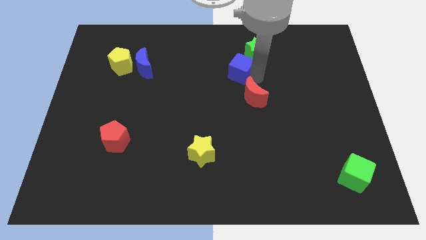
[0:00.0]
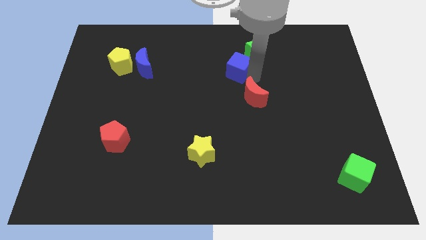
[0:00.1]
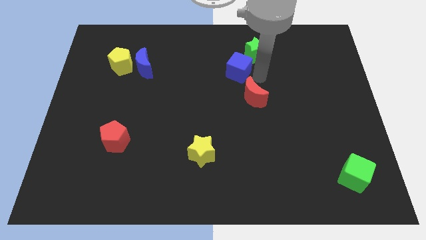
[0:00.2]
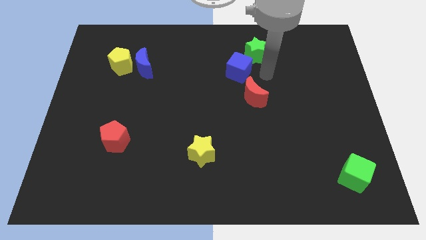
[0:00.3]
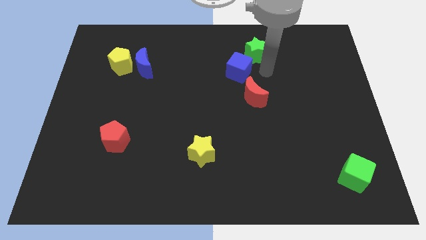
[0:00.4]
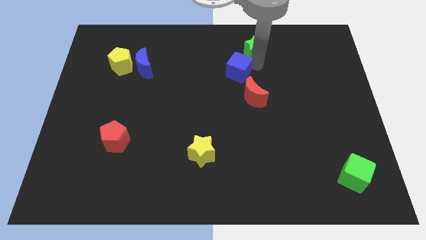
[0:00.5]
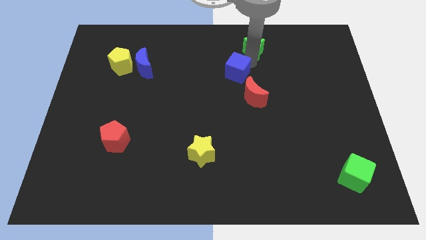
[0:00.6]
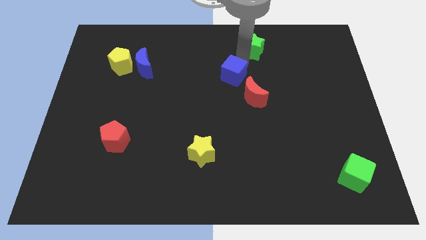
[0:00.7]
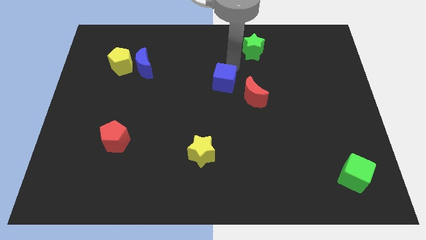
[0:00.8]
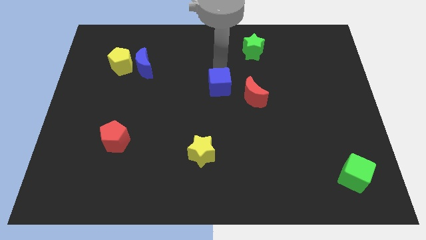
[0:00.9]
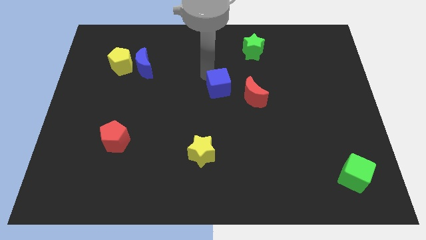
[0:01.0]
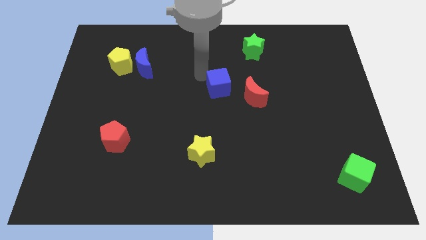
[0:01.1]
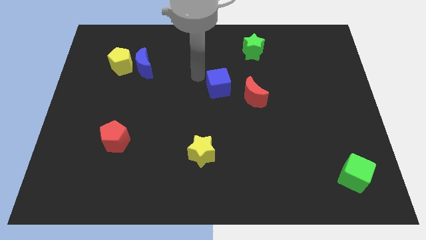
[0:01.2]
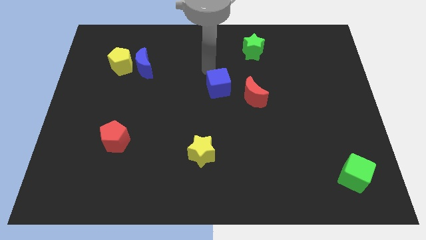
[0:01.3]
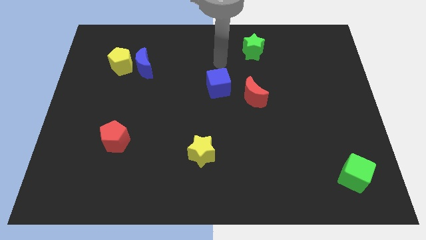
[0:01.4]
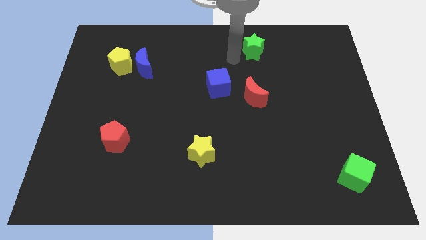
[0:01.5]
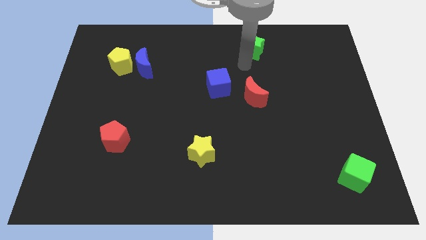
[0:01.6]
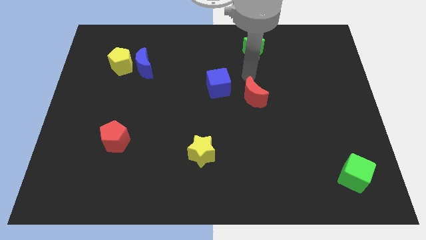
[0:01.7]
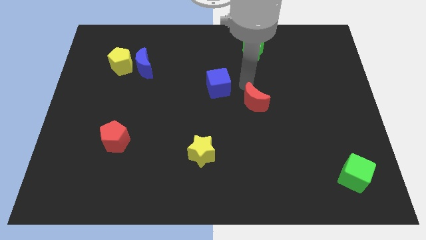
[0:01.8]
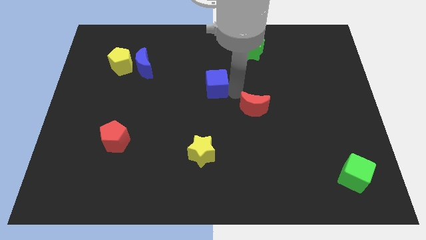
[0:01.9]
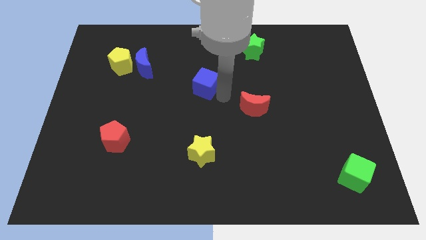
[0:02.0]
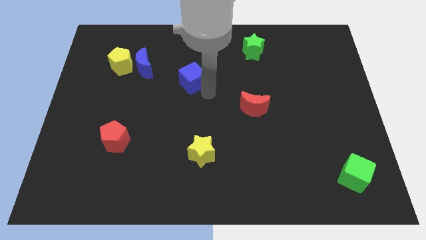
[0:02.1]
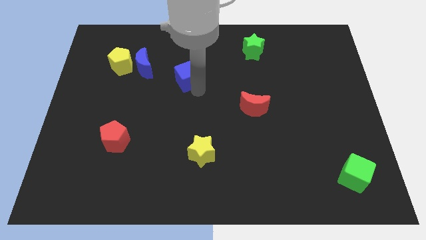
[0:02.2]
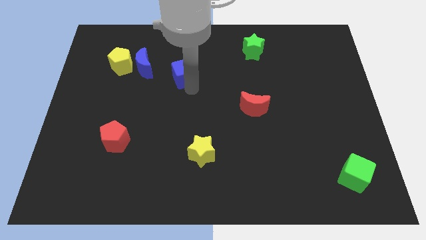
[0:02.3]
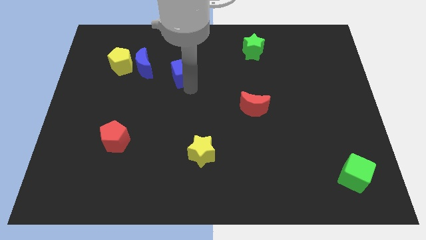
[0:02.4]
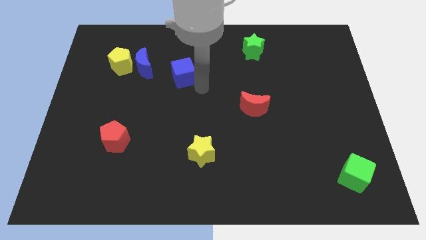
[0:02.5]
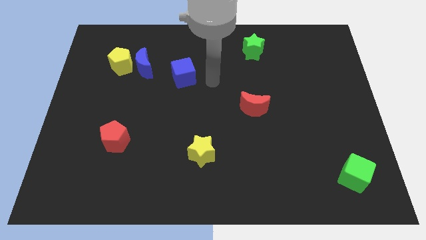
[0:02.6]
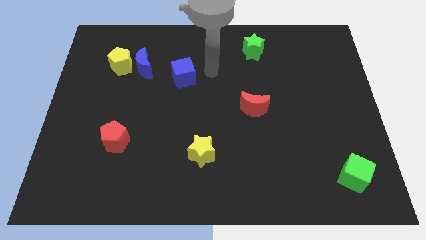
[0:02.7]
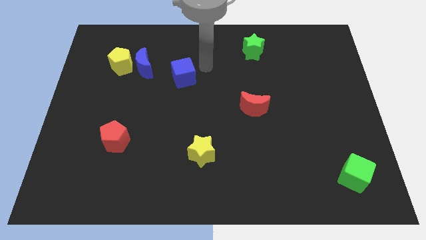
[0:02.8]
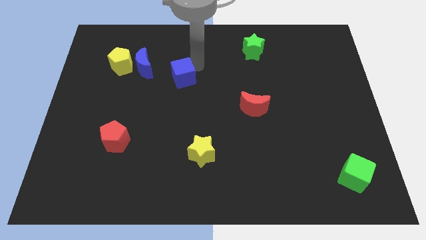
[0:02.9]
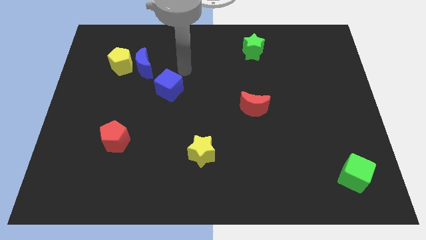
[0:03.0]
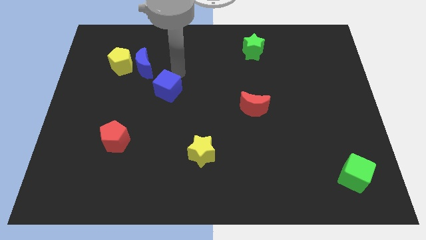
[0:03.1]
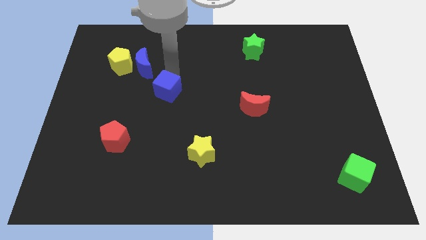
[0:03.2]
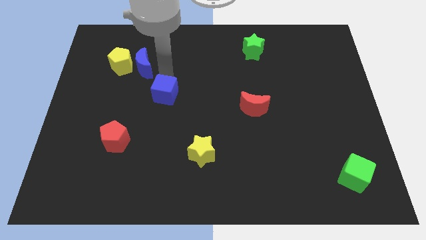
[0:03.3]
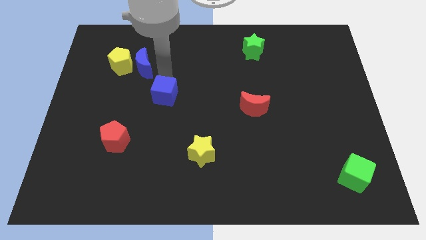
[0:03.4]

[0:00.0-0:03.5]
place the blue cube diagonally to the top of the blue crescent

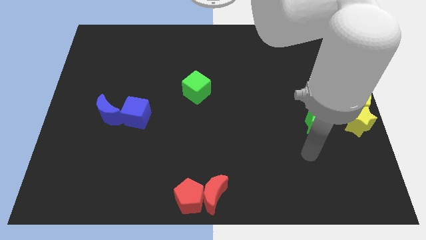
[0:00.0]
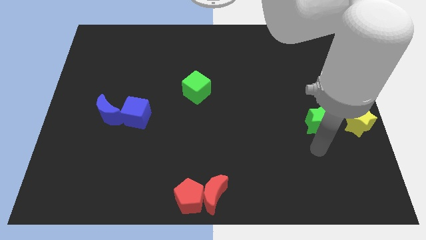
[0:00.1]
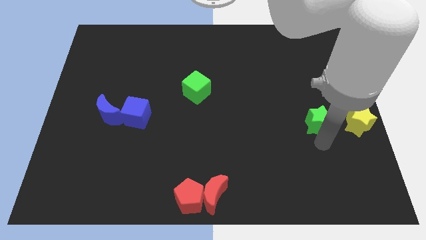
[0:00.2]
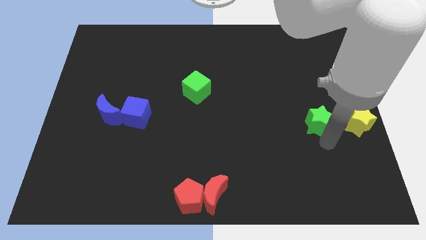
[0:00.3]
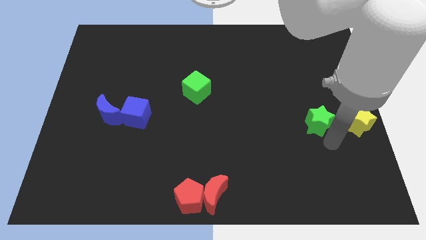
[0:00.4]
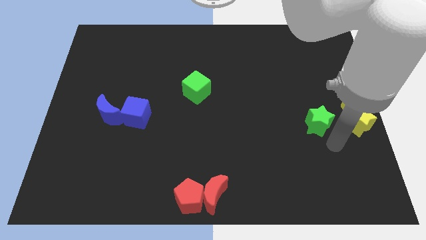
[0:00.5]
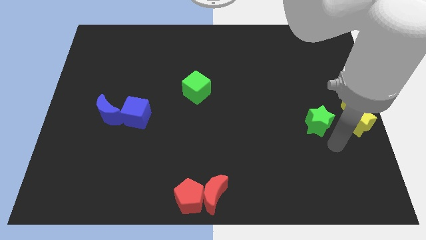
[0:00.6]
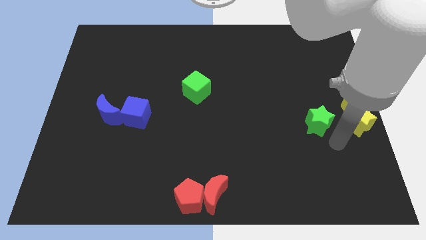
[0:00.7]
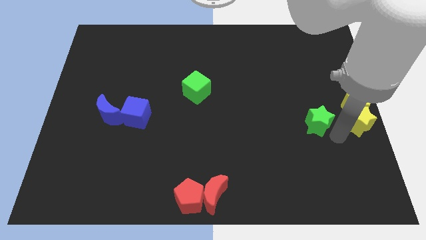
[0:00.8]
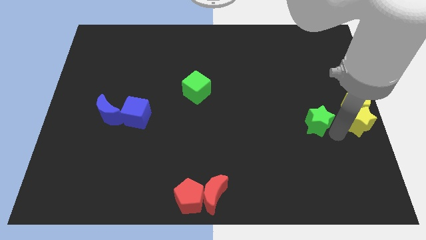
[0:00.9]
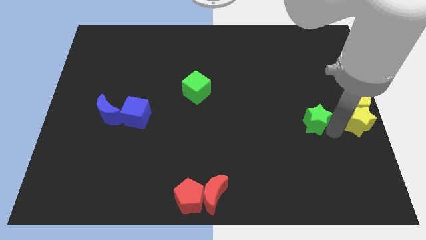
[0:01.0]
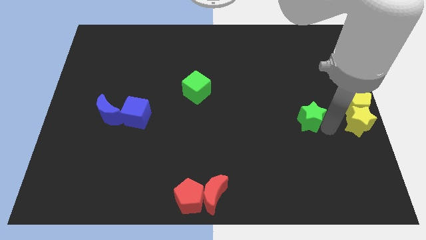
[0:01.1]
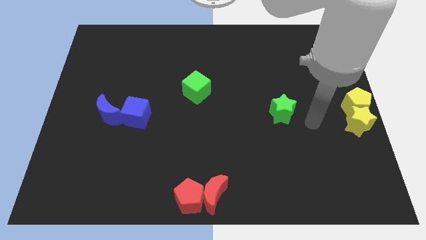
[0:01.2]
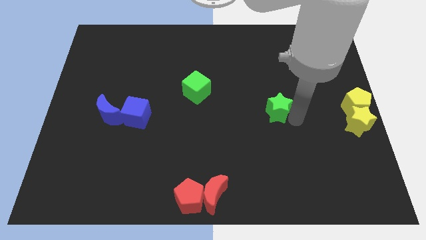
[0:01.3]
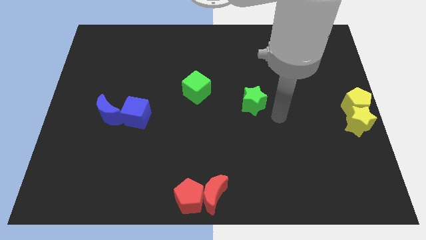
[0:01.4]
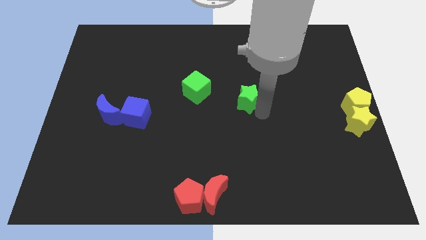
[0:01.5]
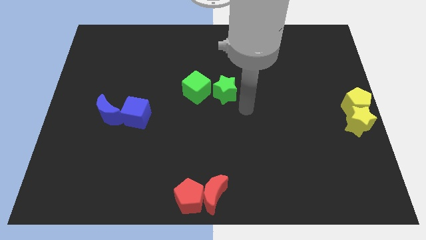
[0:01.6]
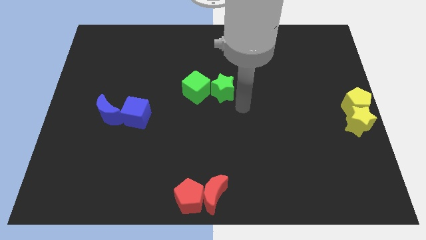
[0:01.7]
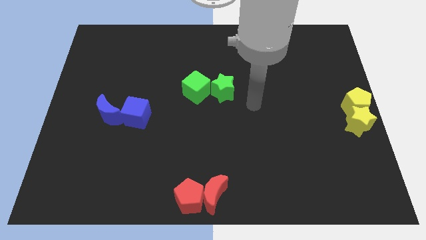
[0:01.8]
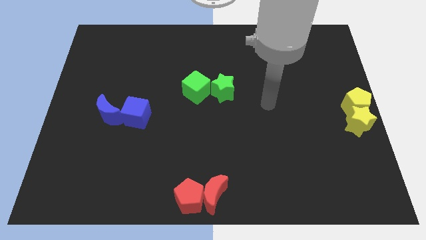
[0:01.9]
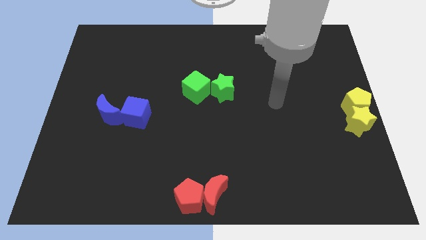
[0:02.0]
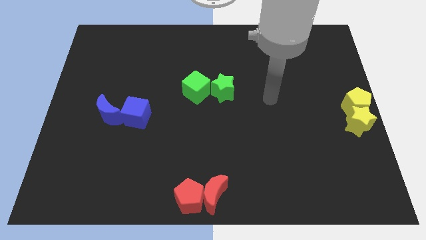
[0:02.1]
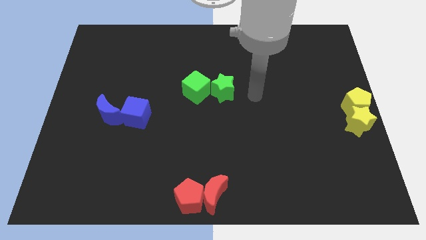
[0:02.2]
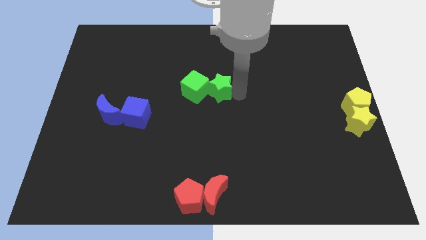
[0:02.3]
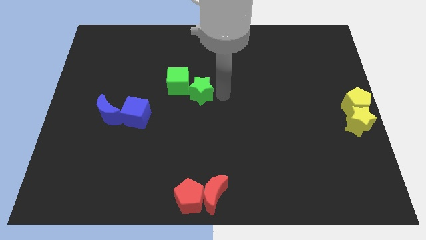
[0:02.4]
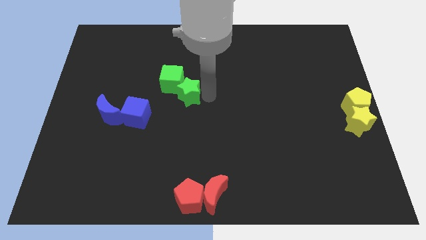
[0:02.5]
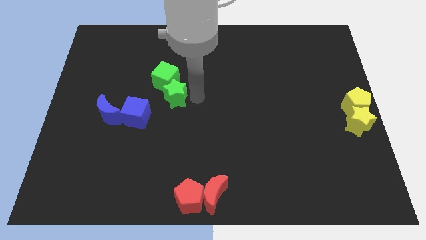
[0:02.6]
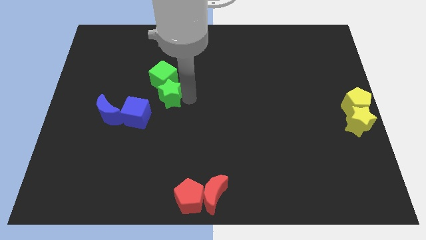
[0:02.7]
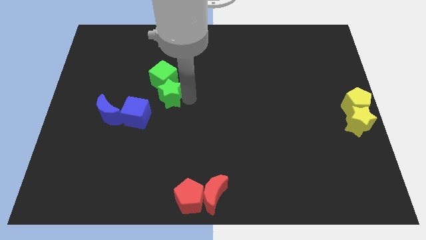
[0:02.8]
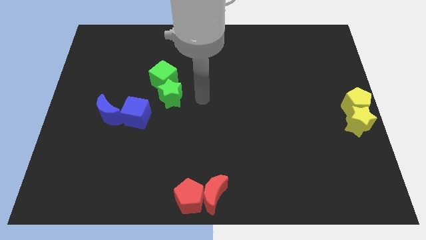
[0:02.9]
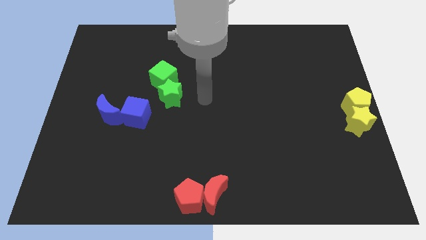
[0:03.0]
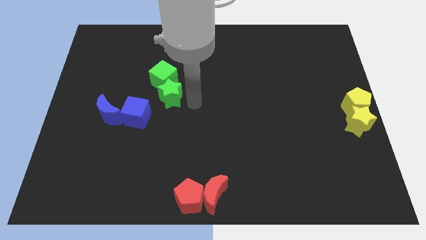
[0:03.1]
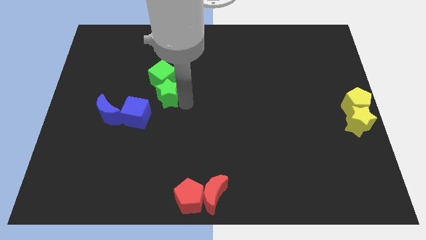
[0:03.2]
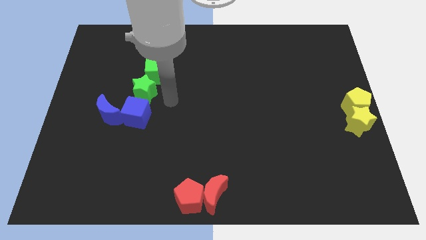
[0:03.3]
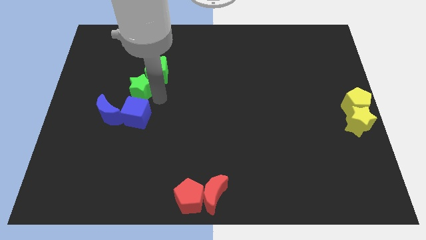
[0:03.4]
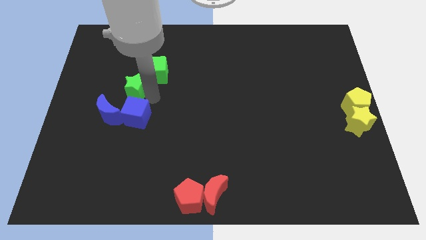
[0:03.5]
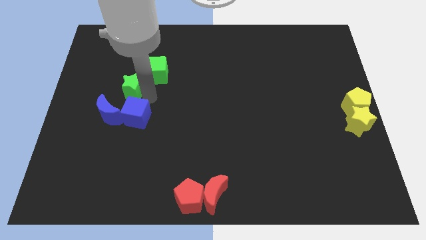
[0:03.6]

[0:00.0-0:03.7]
push the green star into the green cube

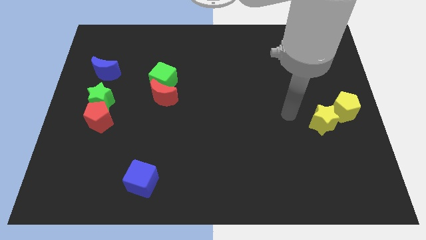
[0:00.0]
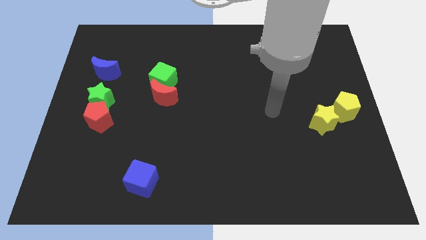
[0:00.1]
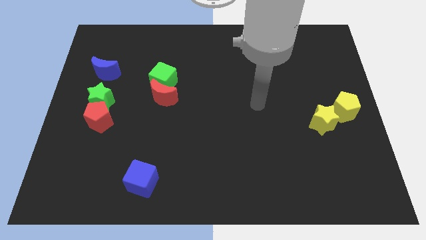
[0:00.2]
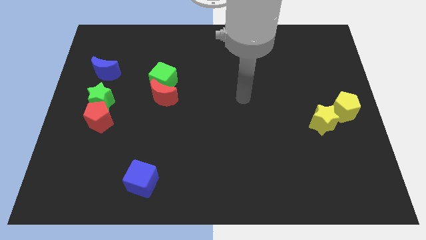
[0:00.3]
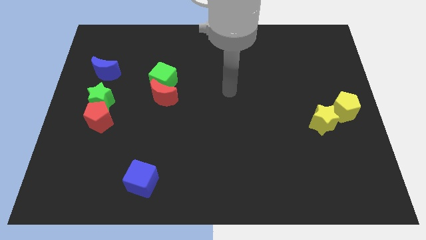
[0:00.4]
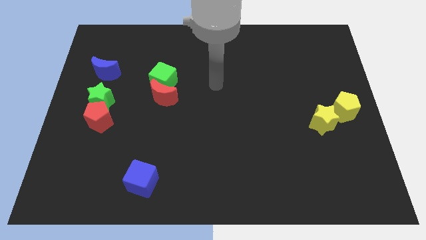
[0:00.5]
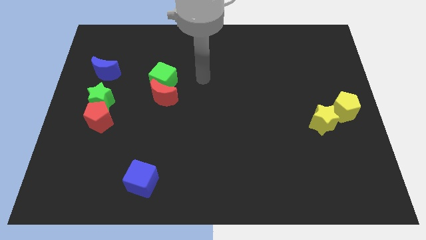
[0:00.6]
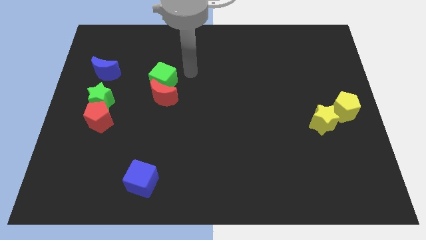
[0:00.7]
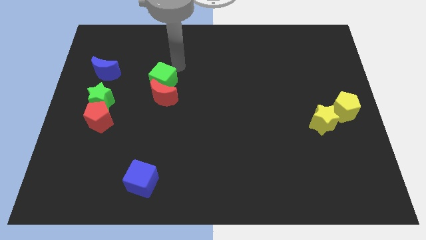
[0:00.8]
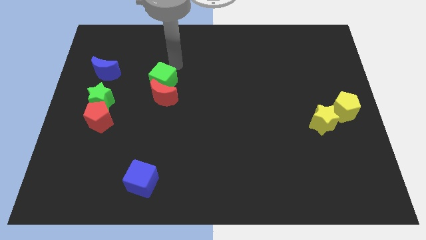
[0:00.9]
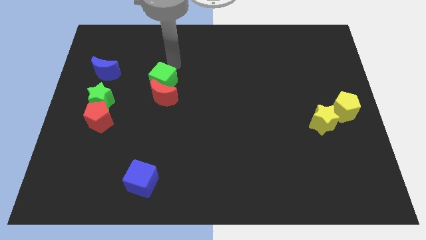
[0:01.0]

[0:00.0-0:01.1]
point your arm above the green cube

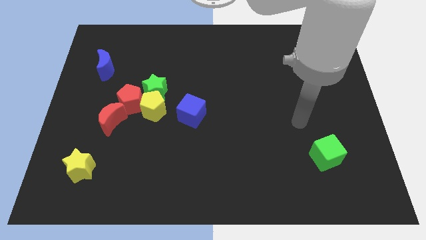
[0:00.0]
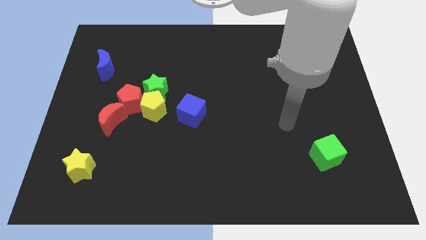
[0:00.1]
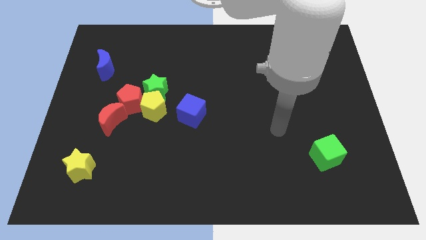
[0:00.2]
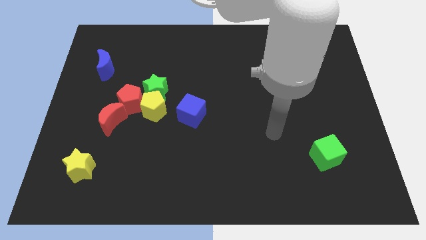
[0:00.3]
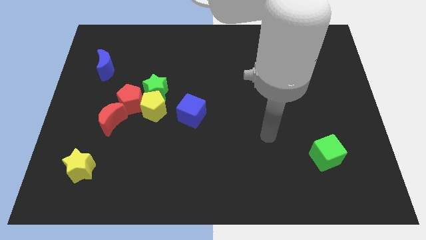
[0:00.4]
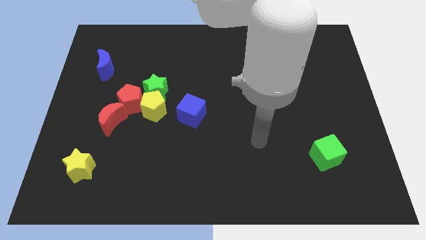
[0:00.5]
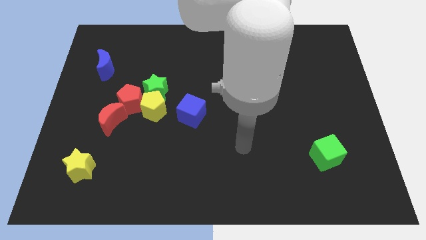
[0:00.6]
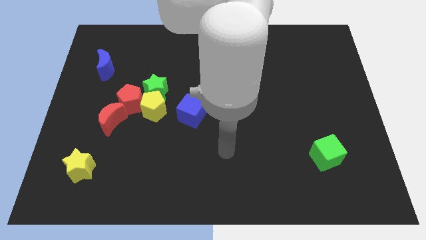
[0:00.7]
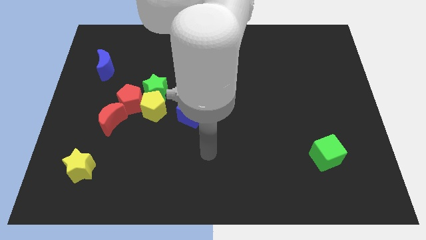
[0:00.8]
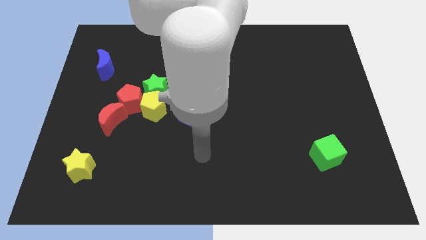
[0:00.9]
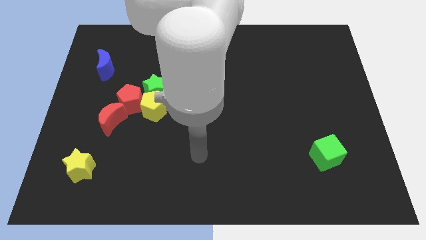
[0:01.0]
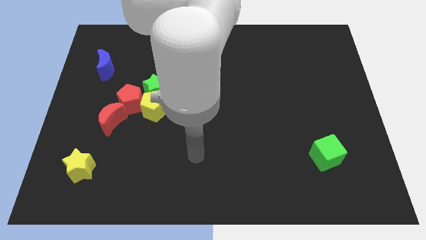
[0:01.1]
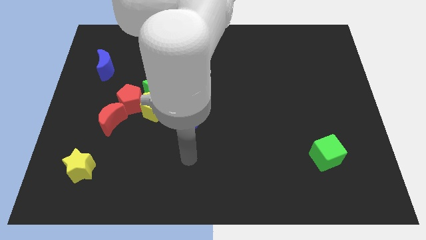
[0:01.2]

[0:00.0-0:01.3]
move your hand towards the yellow star
